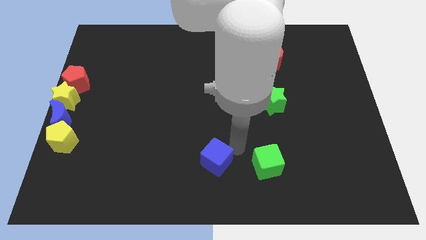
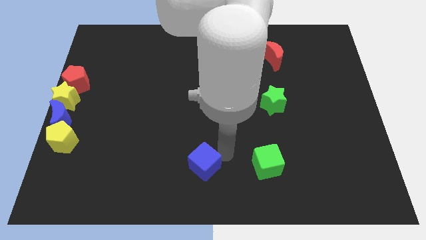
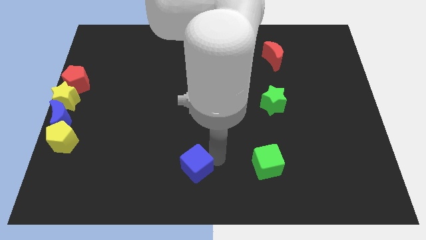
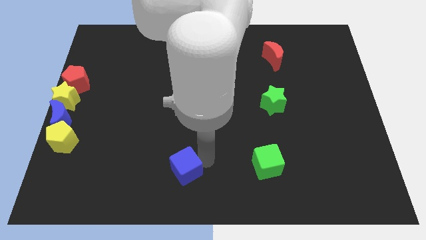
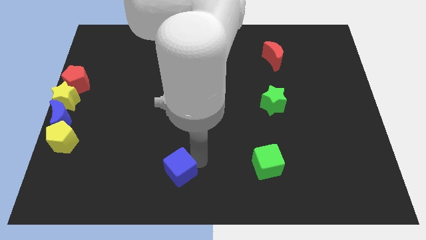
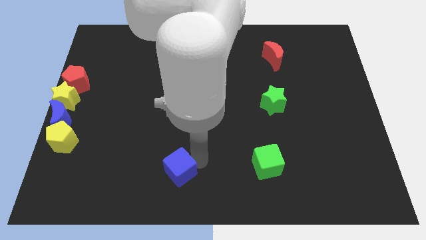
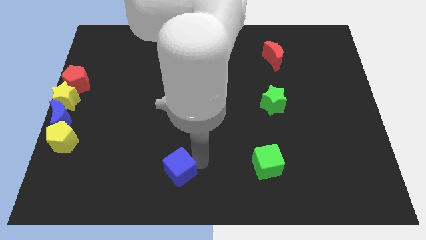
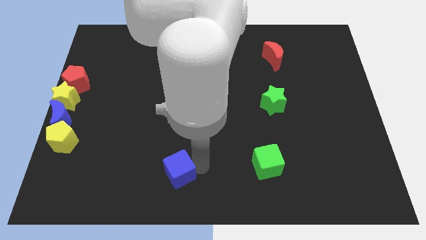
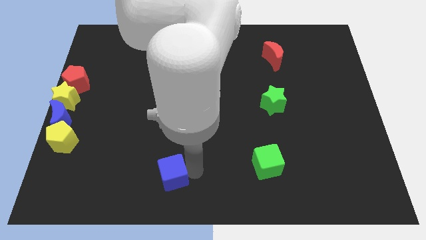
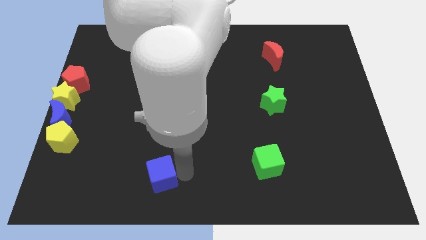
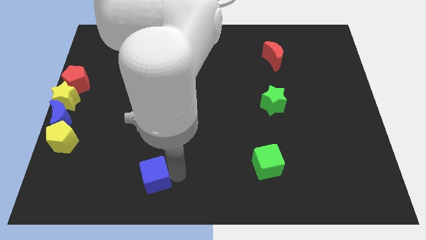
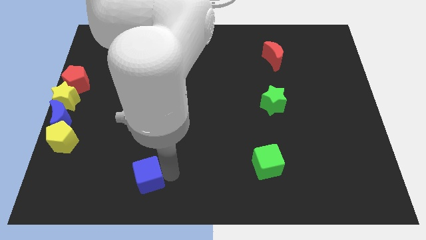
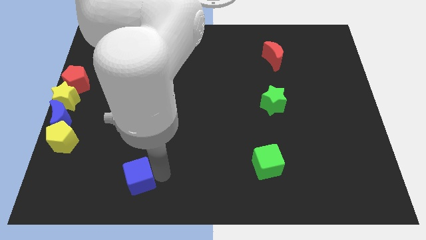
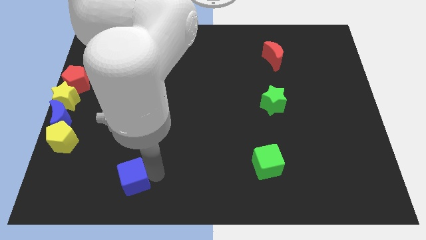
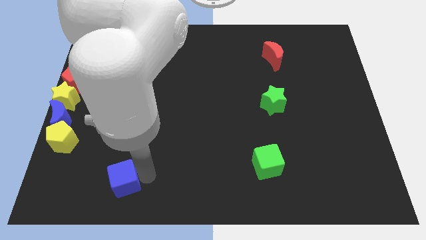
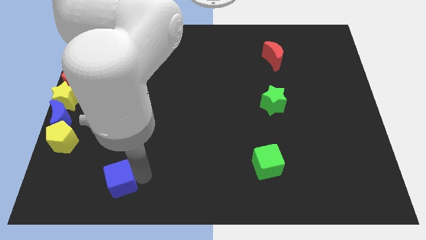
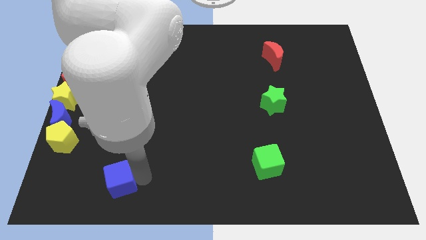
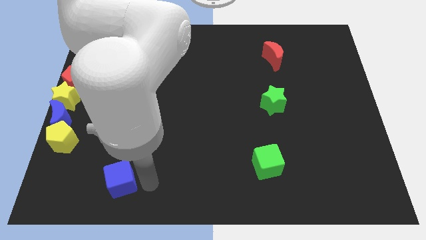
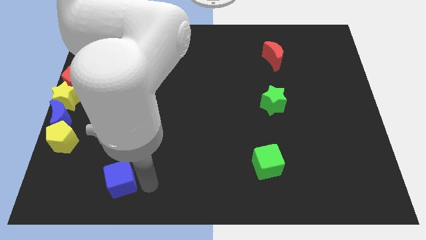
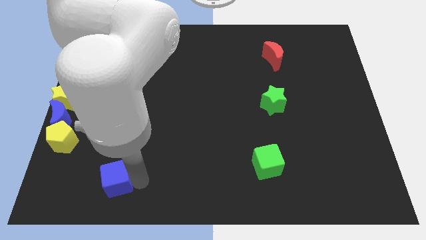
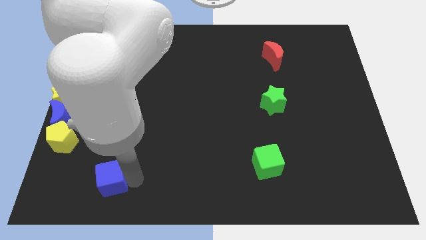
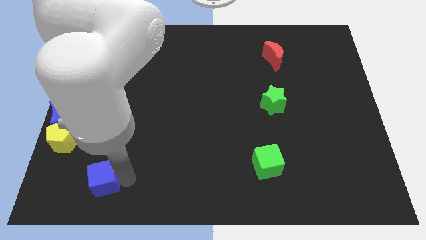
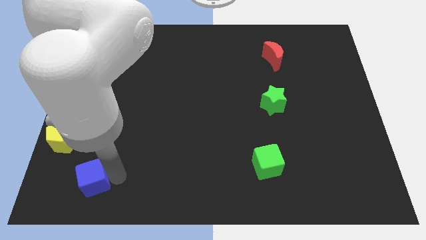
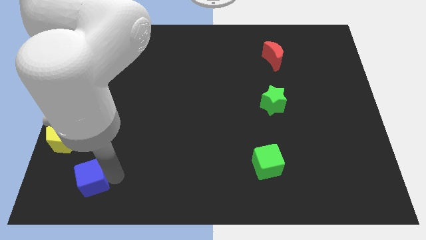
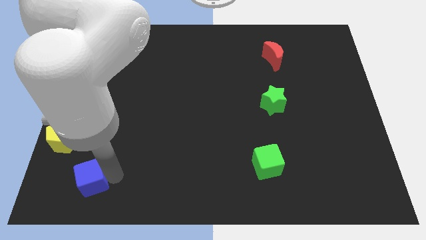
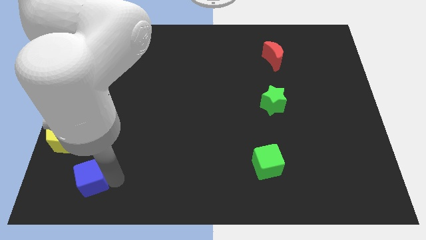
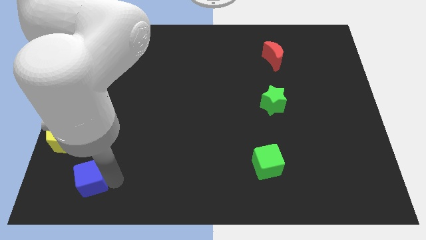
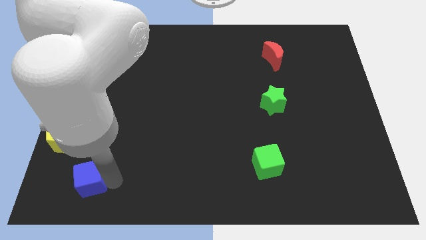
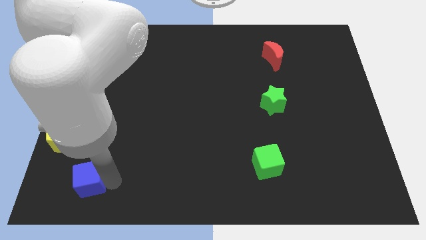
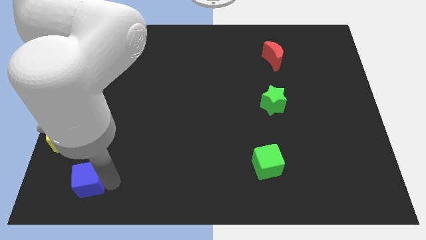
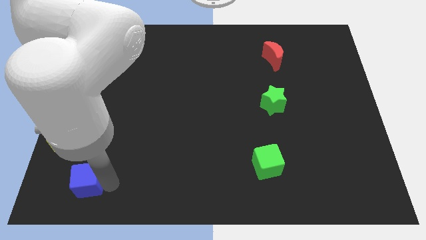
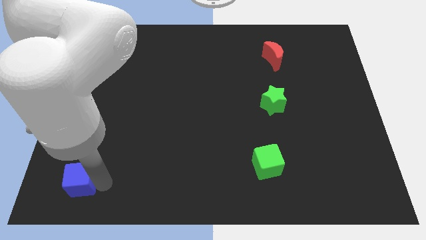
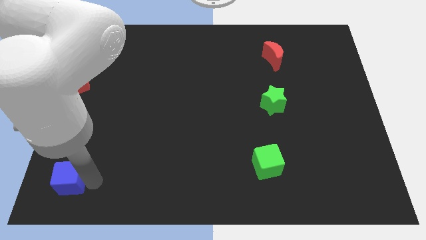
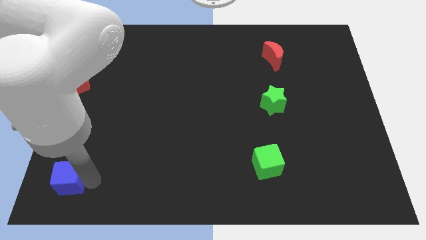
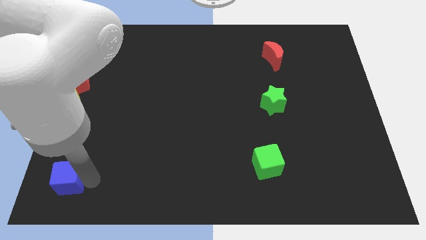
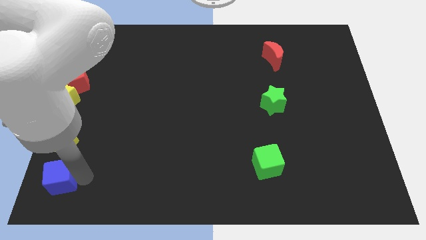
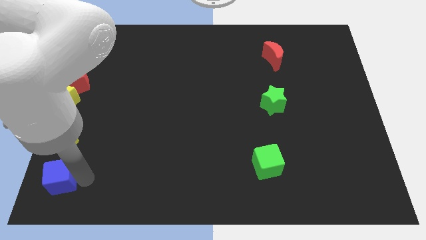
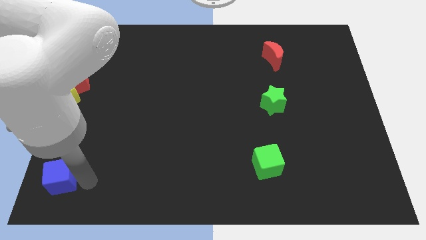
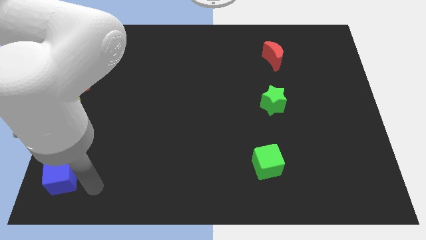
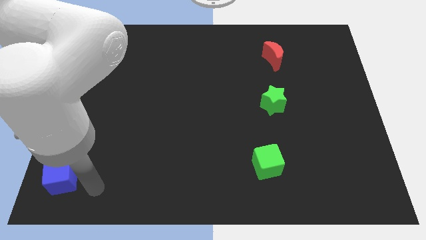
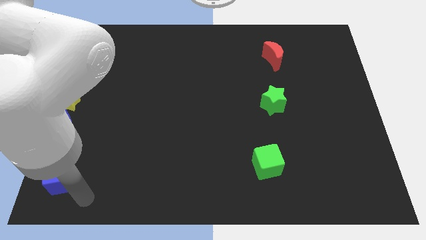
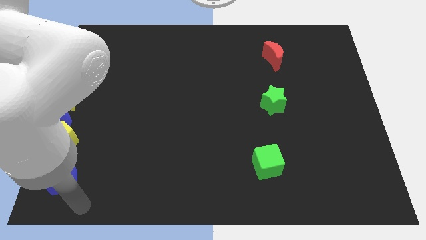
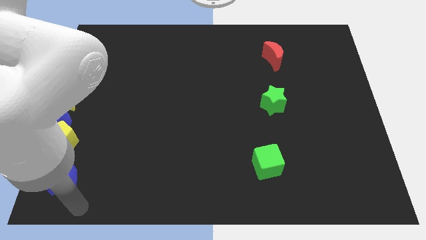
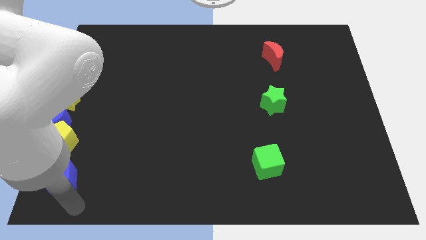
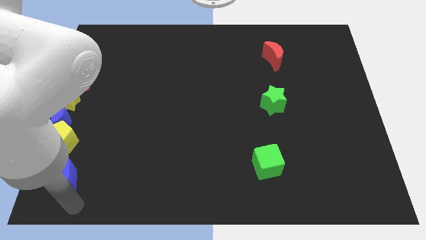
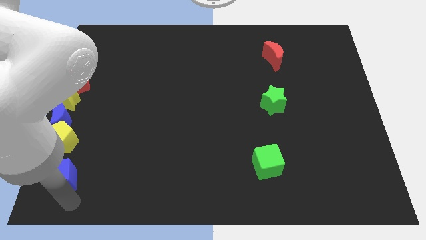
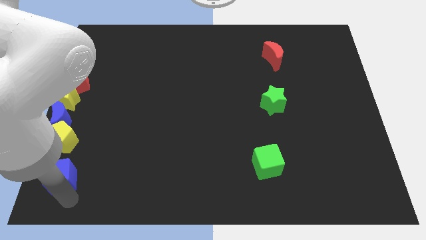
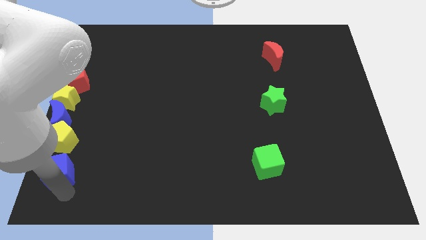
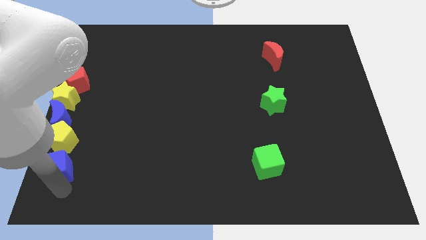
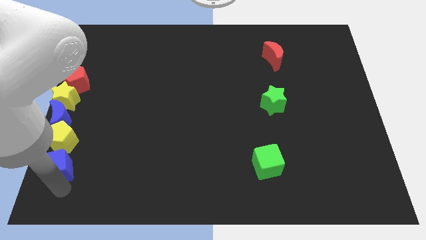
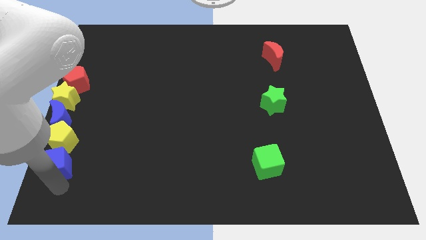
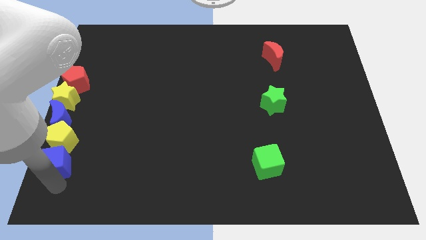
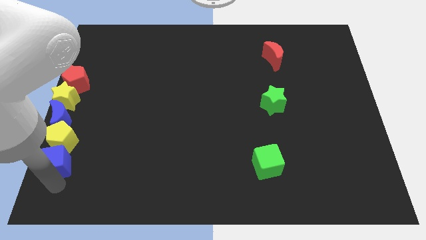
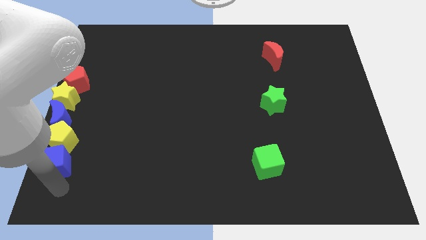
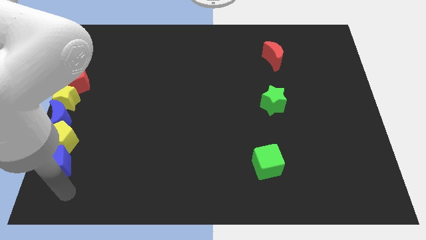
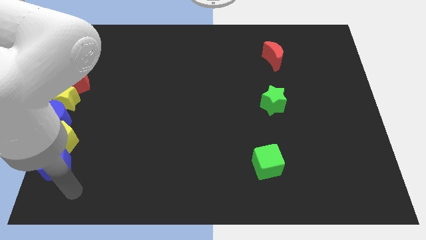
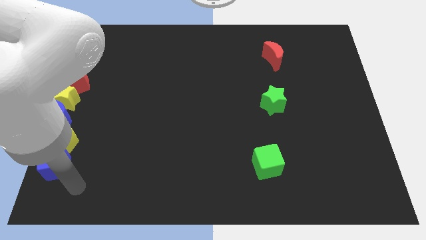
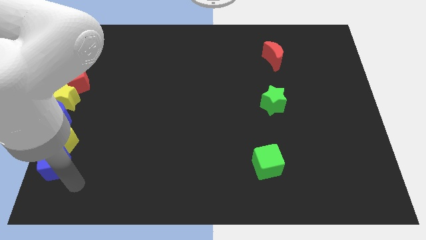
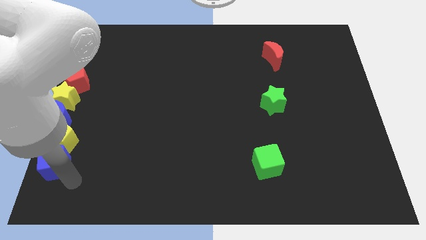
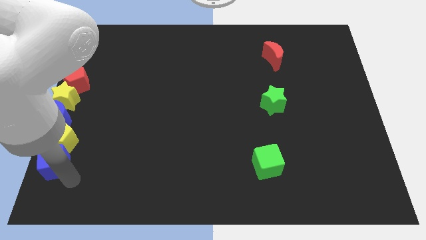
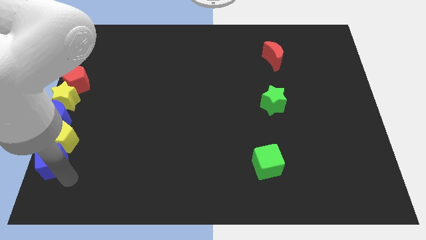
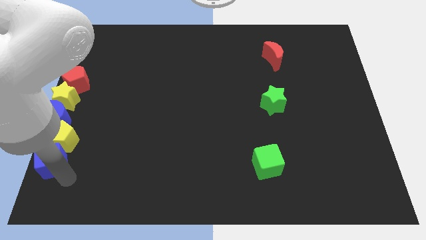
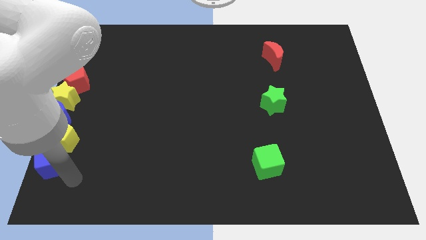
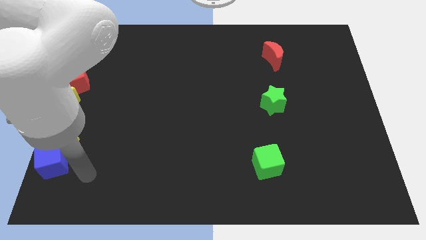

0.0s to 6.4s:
place the blue cube below the yellow pentagon

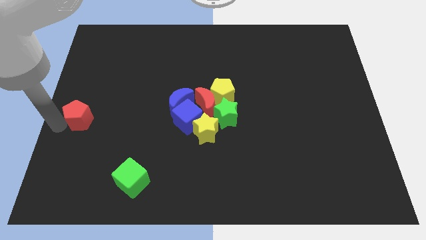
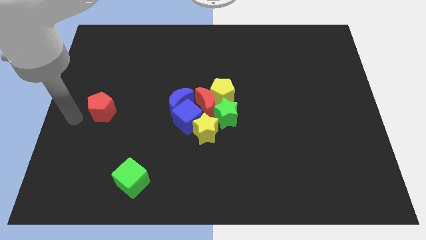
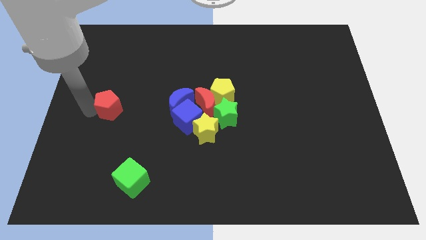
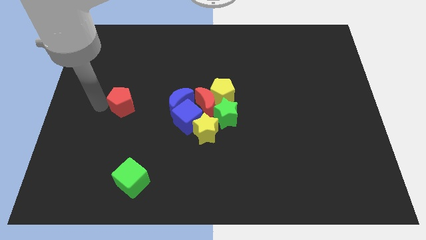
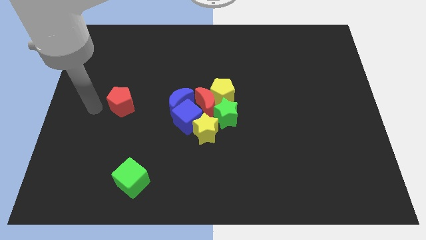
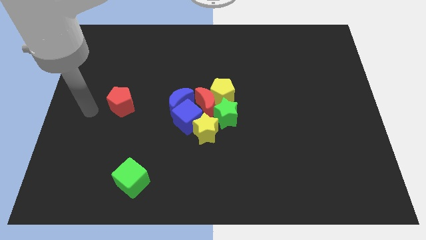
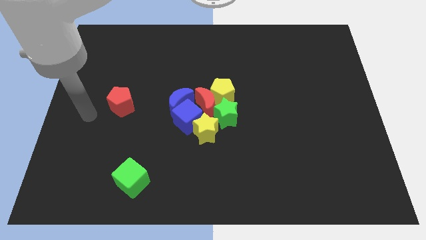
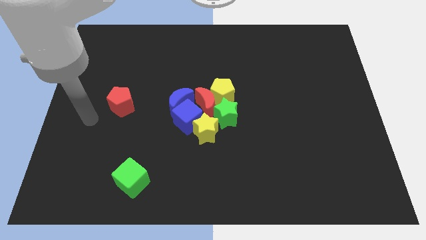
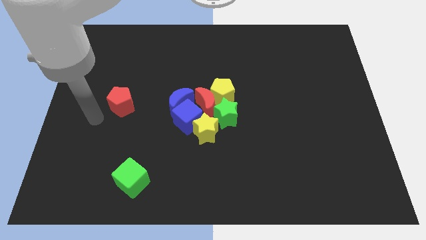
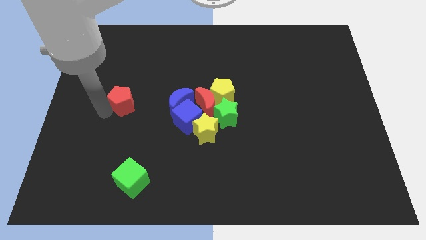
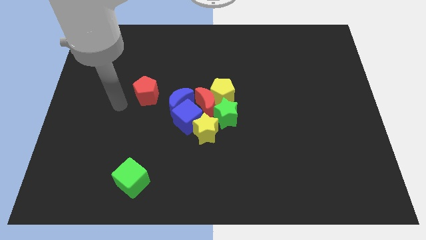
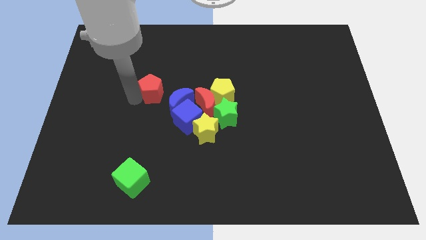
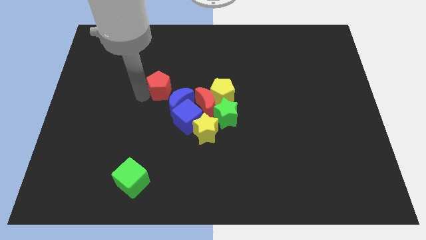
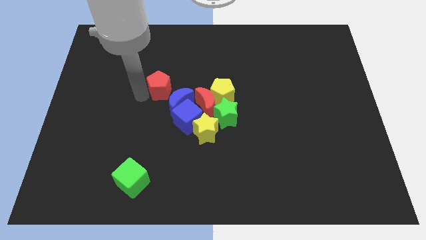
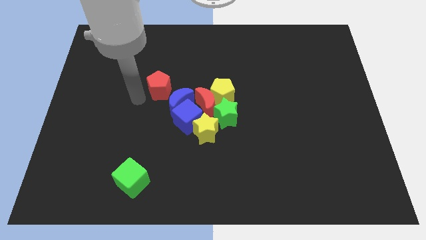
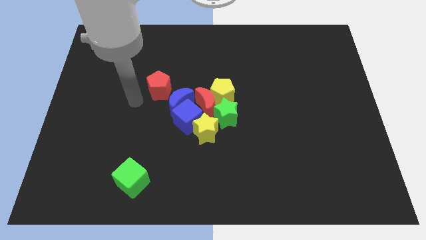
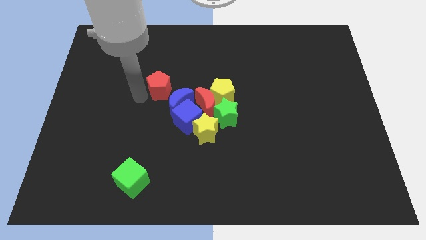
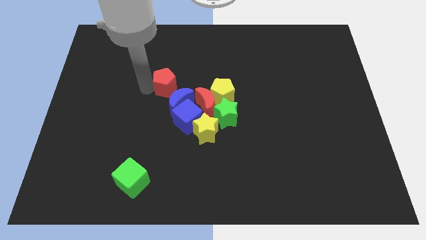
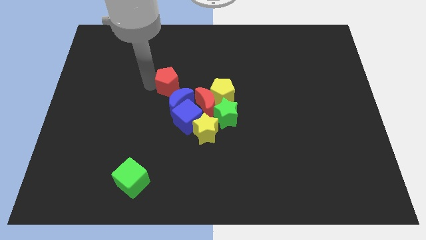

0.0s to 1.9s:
push the red pentagon towards the group of the blocks

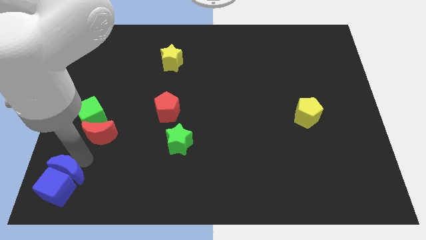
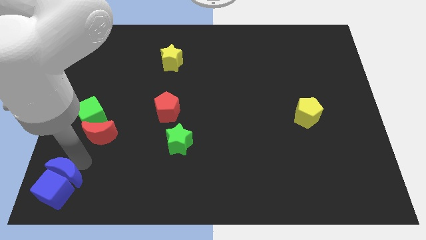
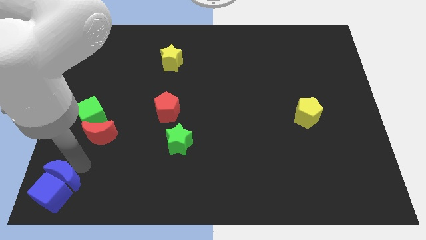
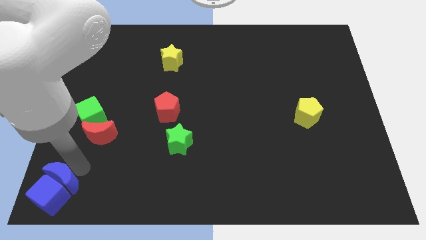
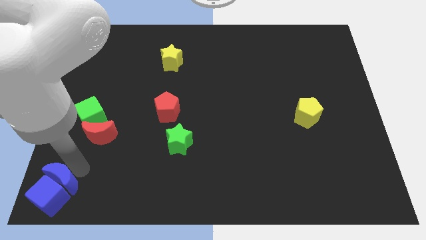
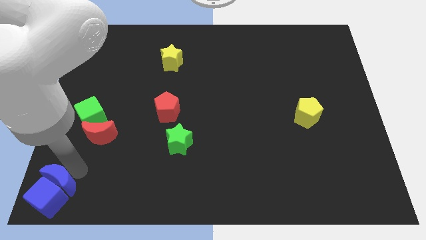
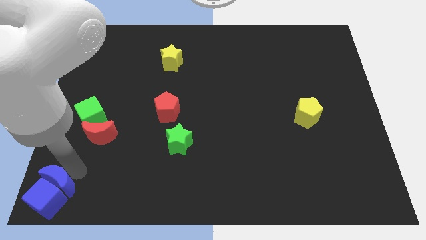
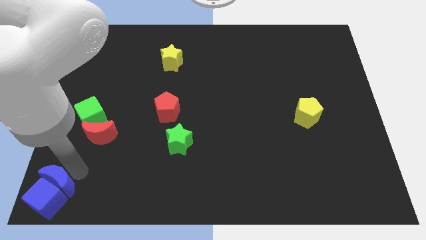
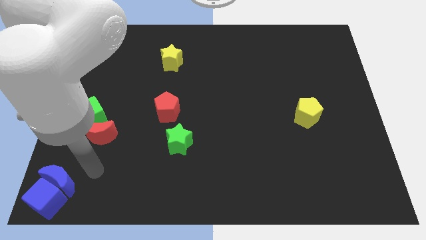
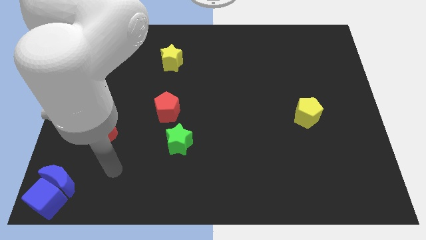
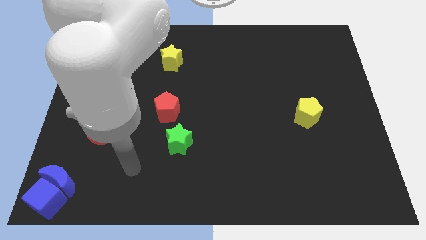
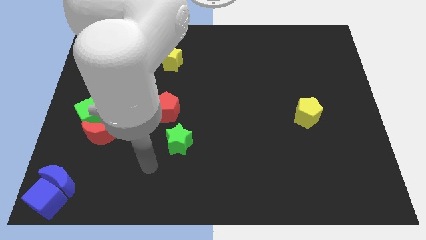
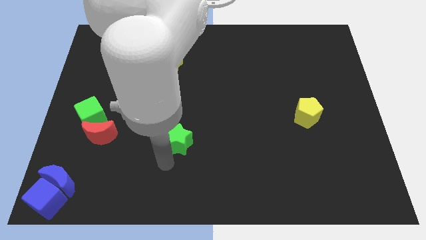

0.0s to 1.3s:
push the blue cube and blue crescent towards the bottom left corner of the board
